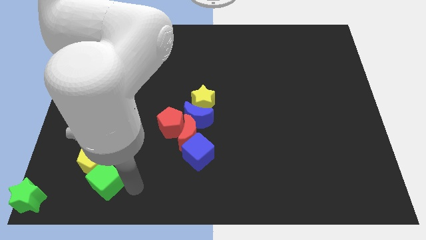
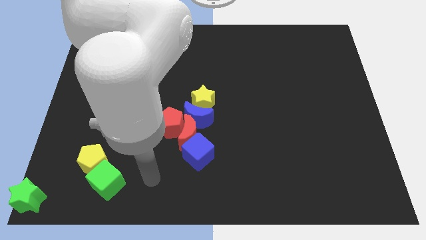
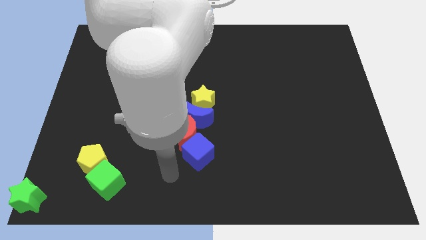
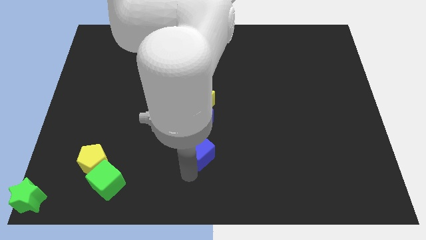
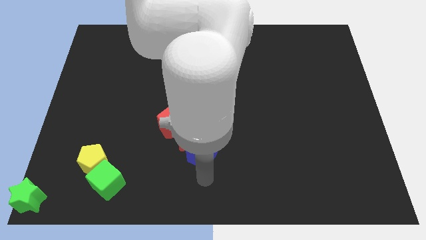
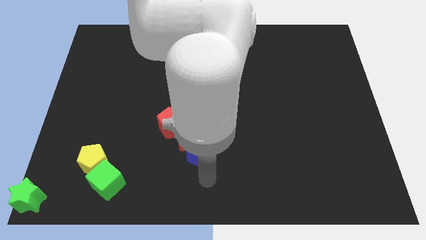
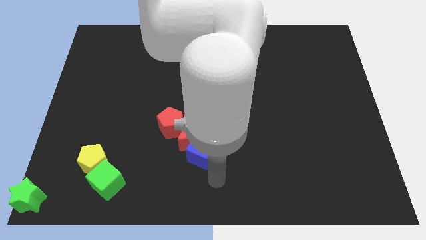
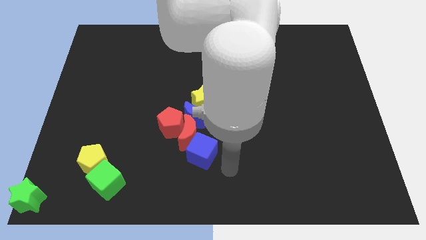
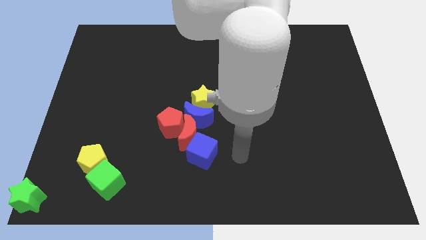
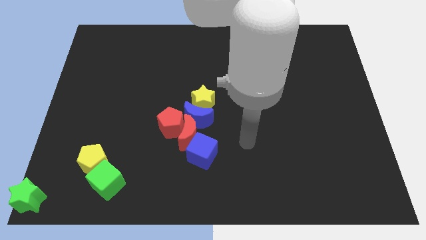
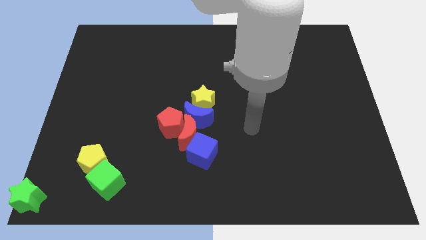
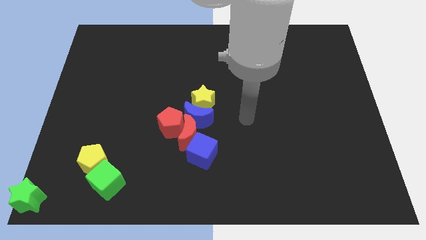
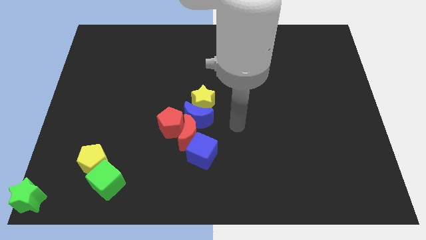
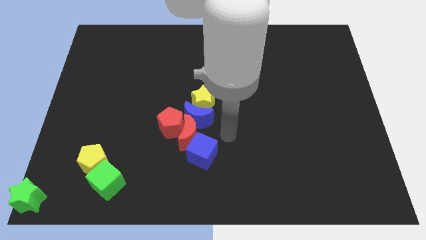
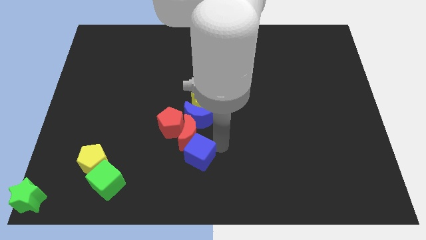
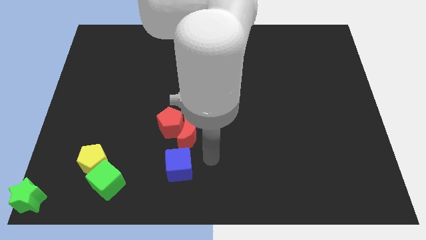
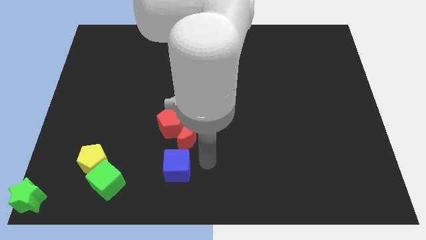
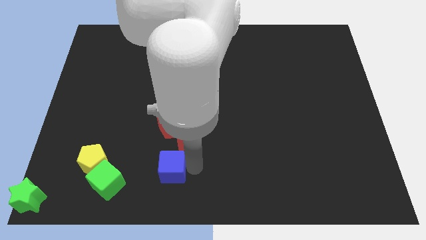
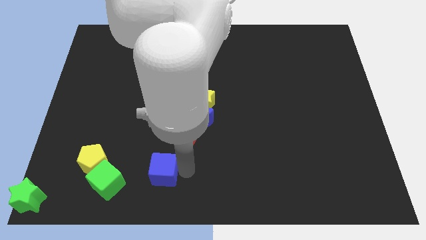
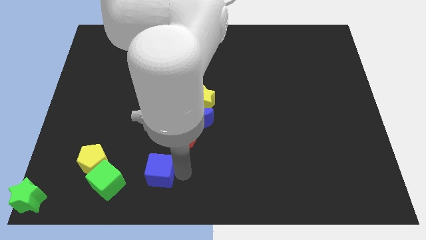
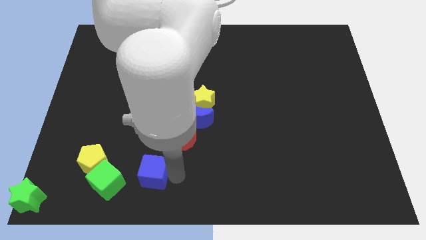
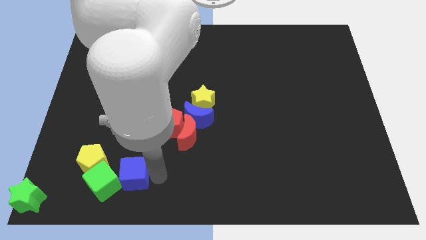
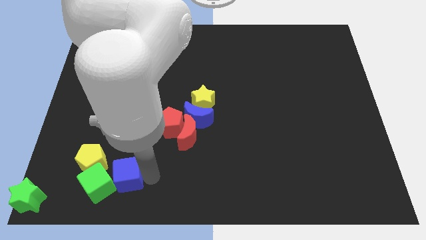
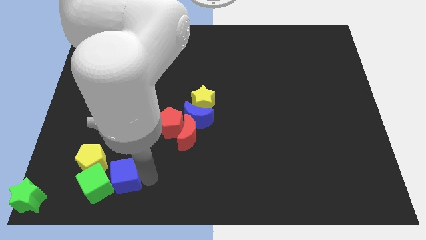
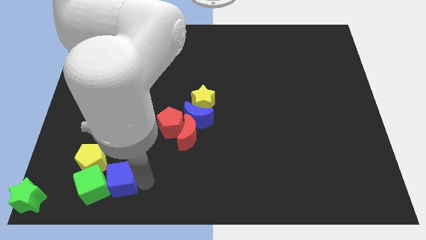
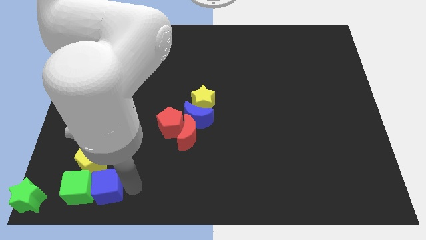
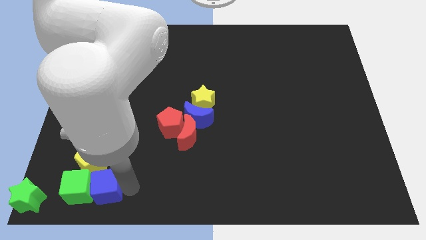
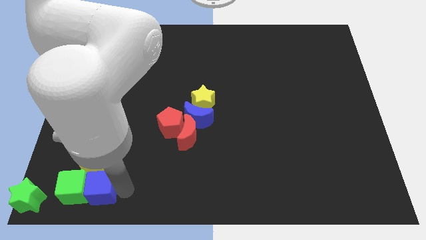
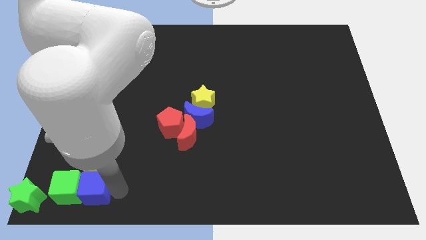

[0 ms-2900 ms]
push the blue cube into green cube

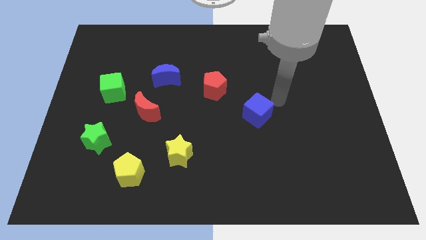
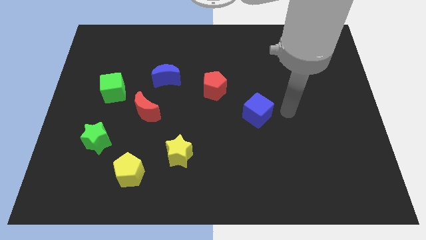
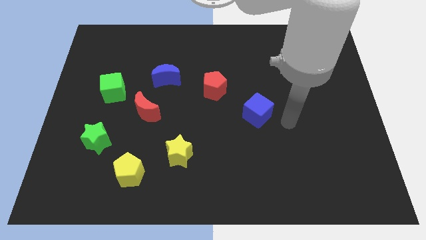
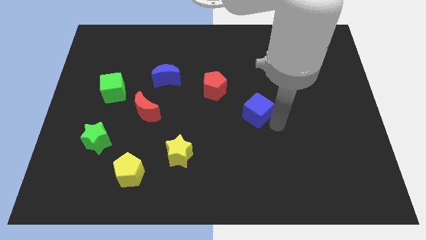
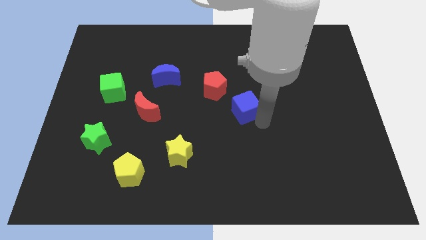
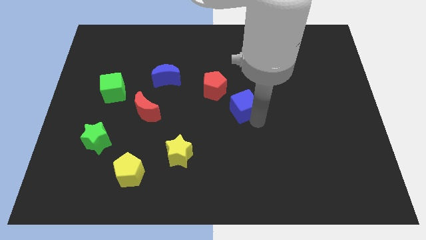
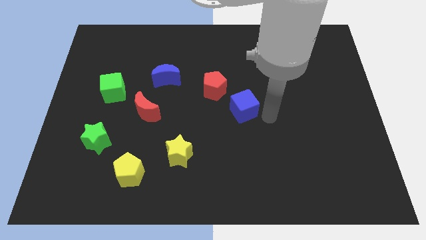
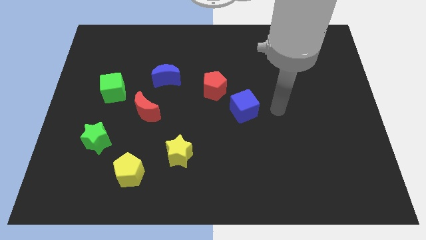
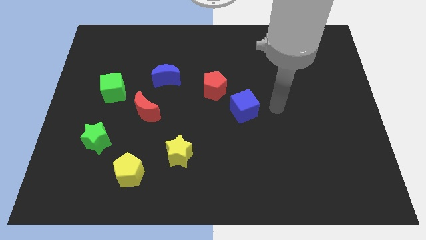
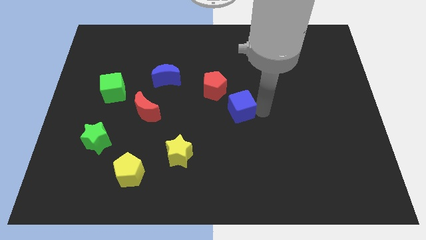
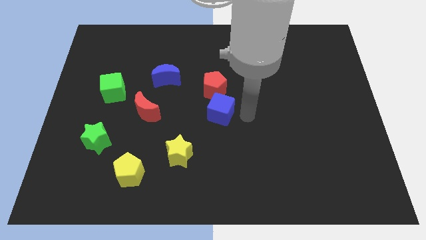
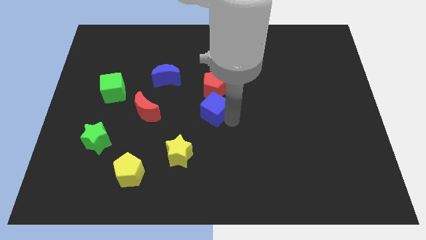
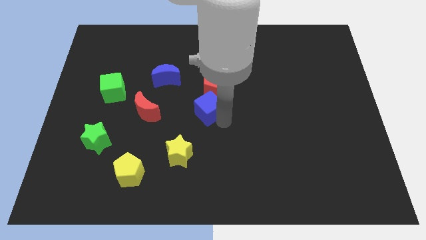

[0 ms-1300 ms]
move the blue cube to the bottom of the red pentagon

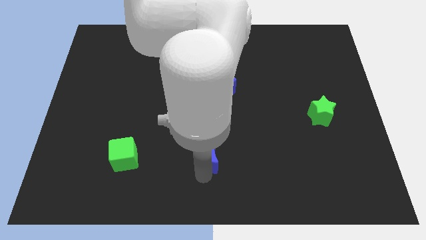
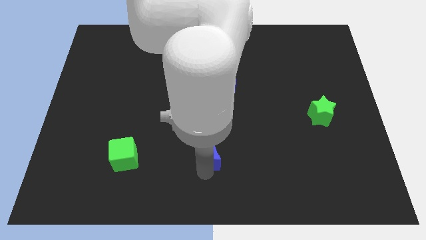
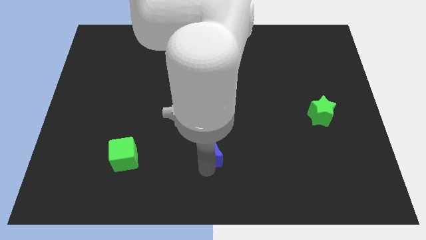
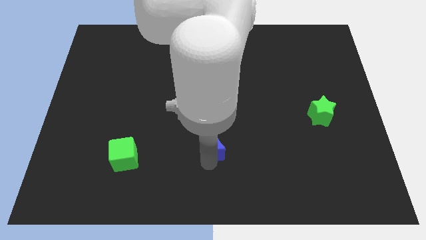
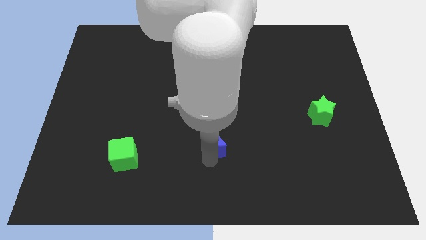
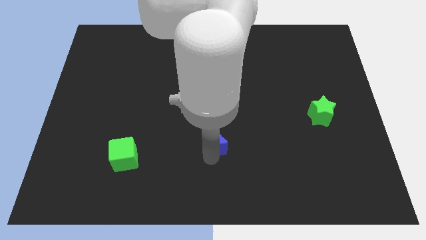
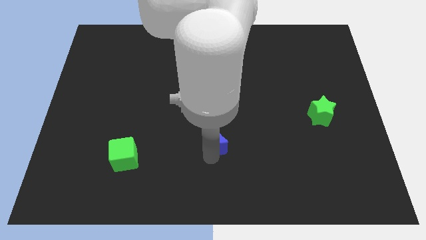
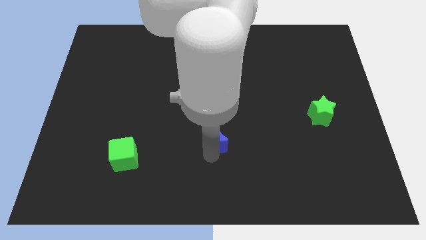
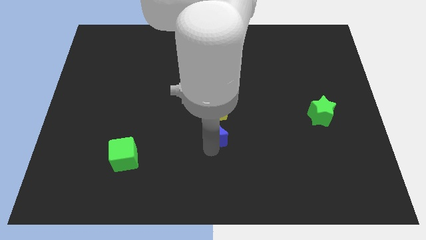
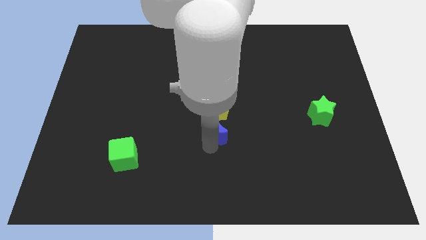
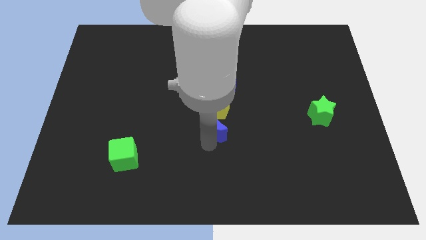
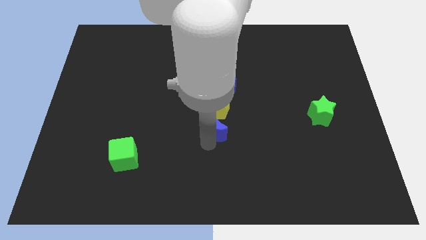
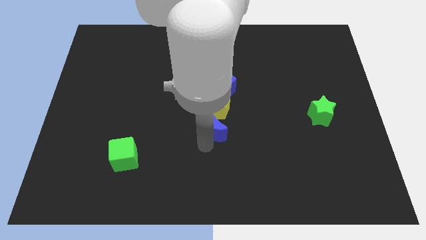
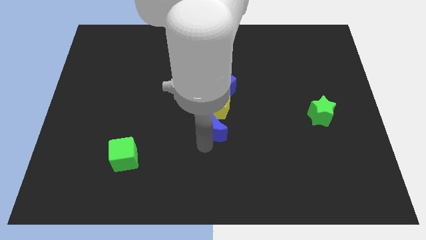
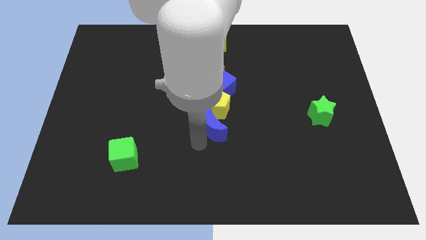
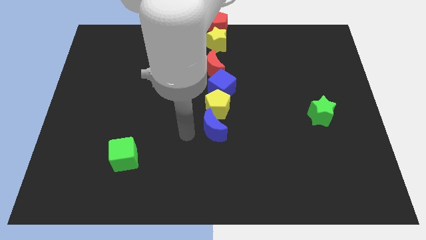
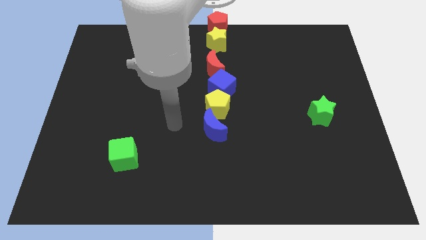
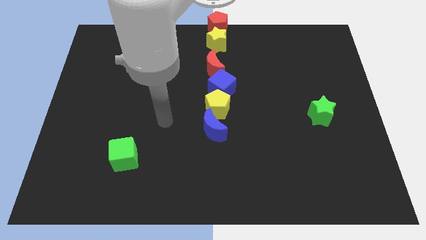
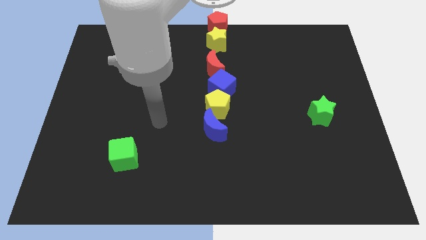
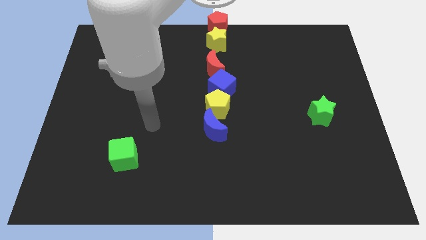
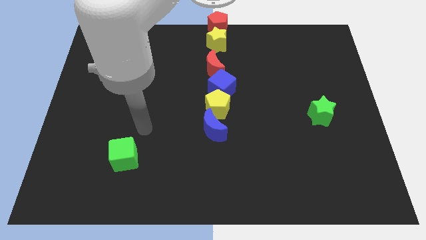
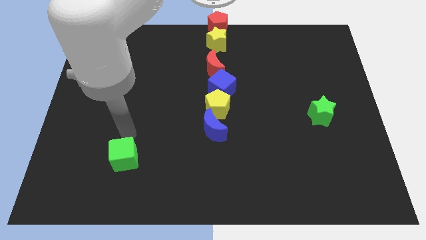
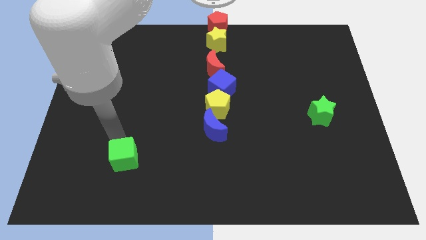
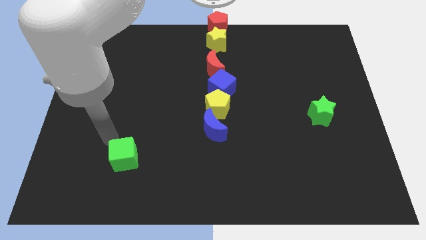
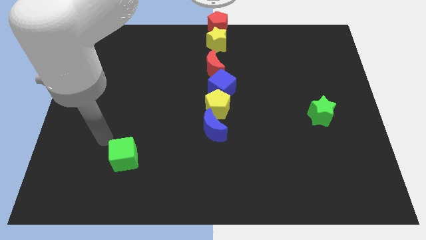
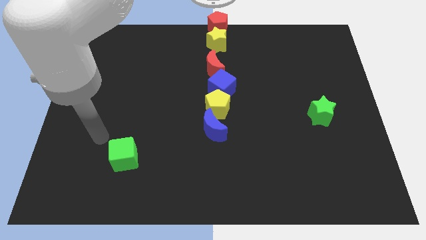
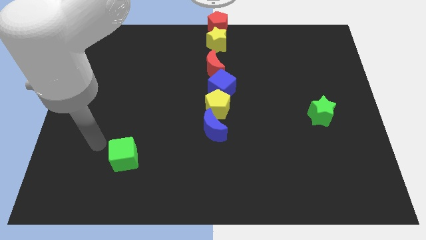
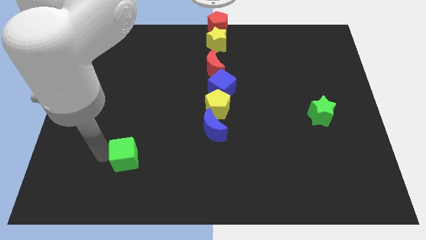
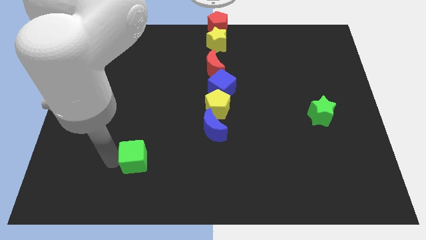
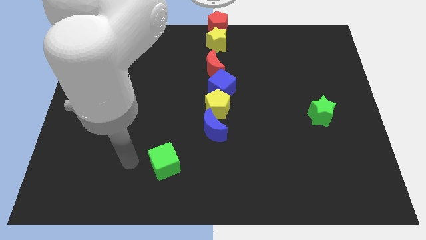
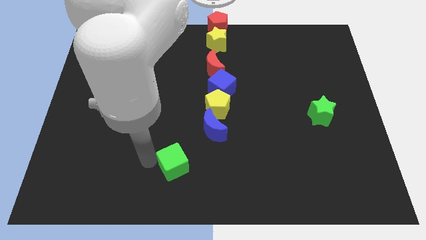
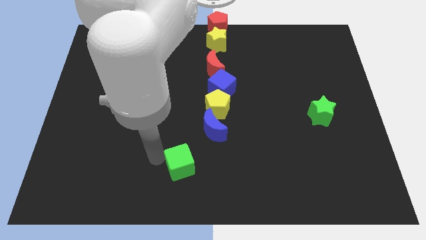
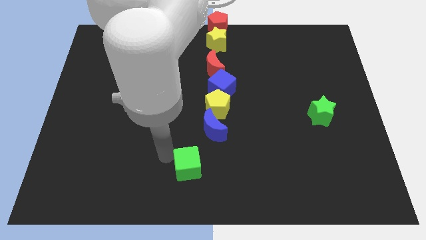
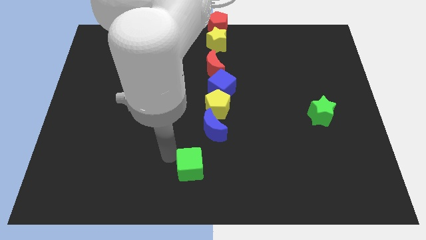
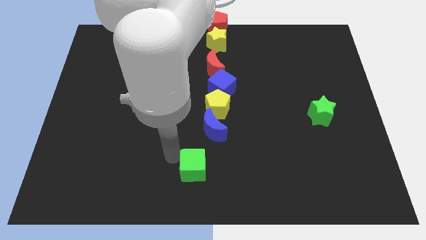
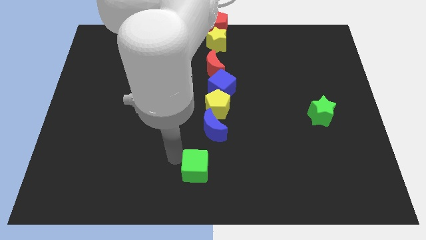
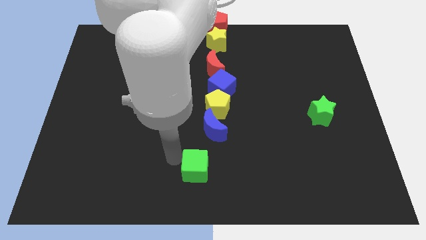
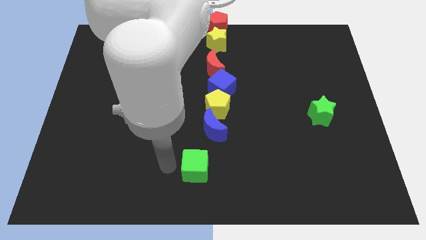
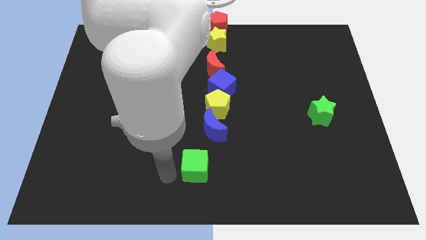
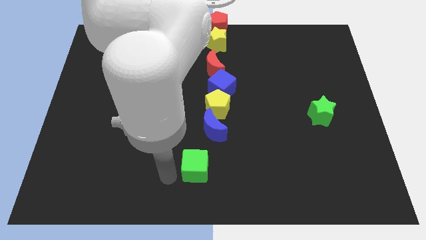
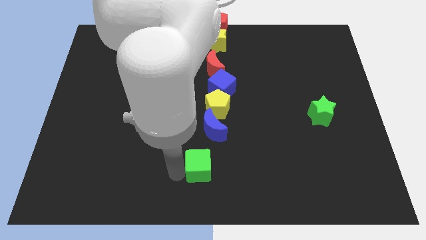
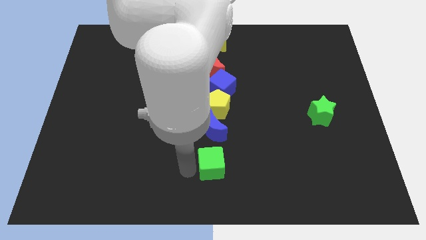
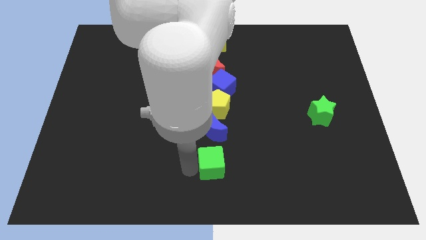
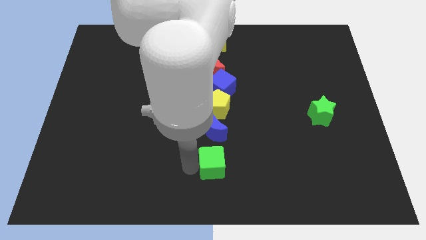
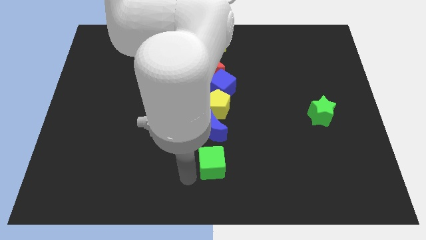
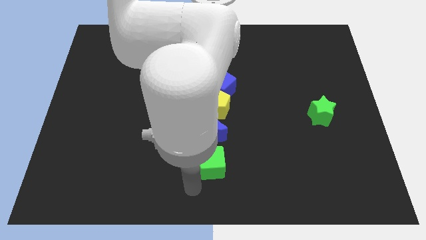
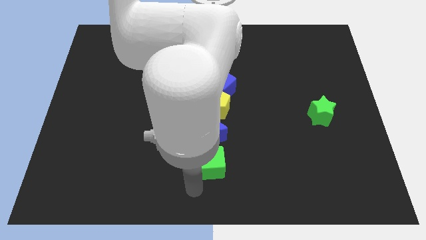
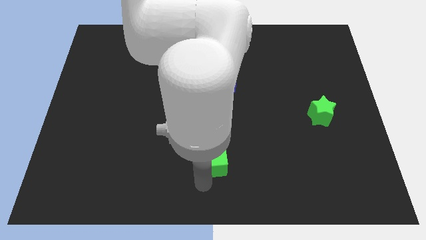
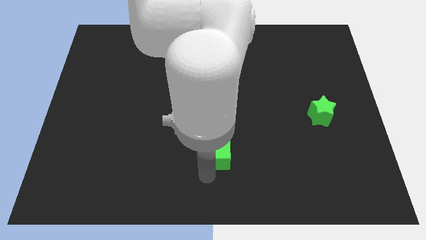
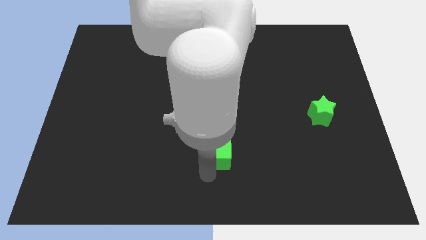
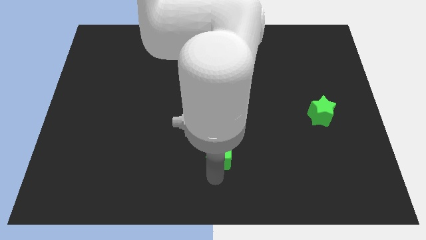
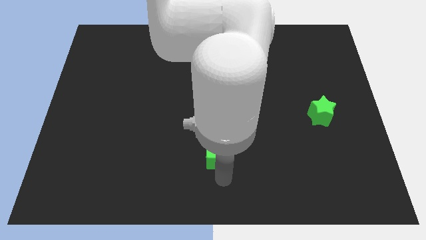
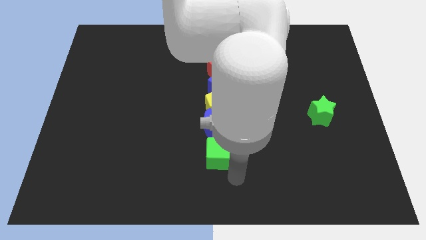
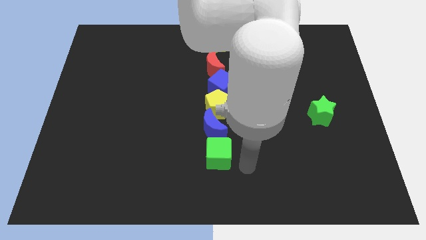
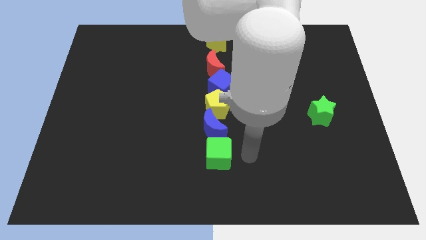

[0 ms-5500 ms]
move the green cube towards the bottom center of the board
